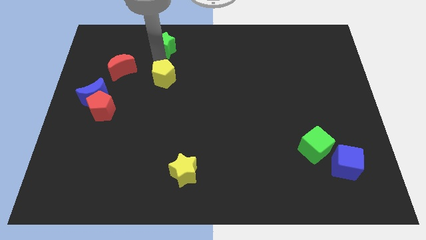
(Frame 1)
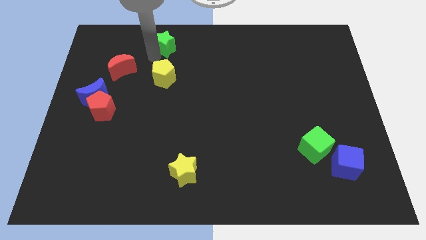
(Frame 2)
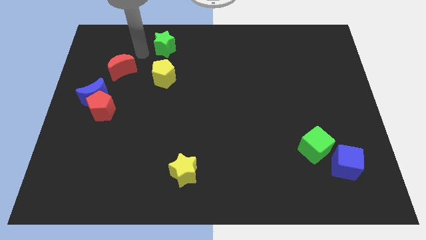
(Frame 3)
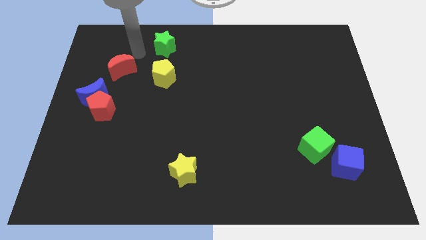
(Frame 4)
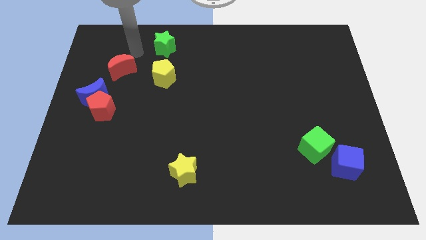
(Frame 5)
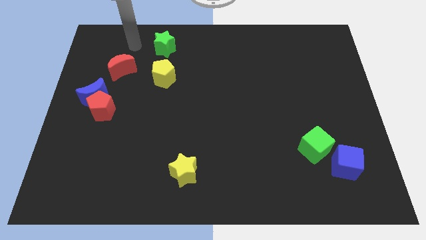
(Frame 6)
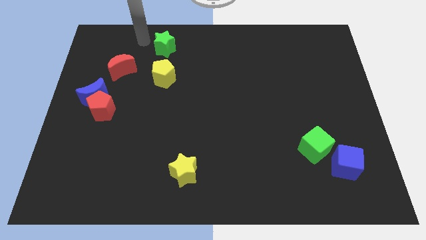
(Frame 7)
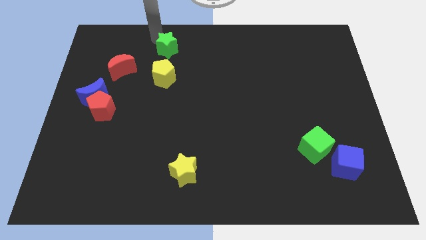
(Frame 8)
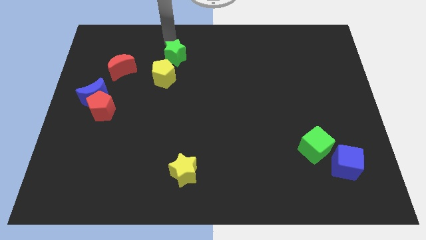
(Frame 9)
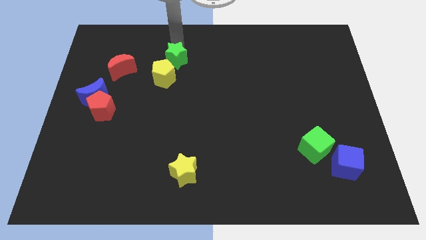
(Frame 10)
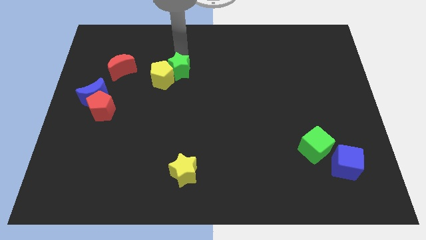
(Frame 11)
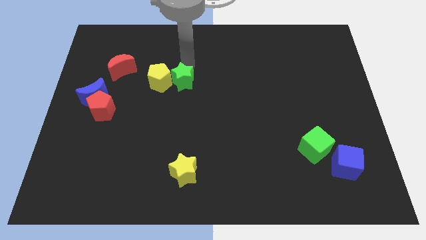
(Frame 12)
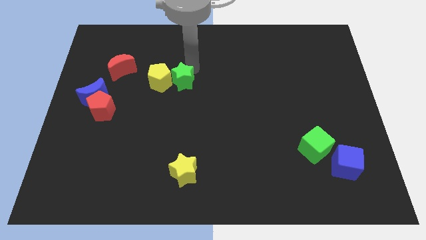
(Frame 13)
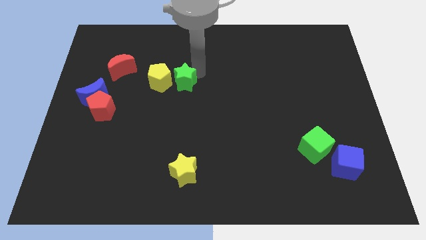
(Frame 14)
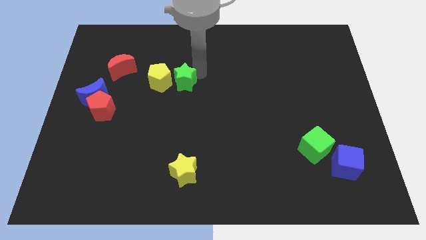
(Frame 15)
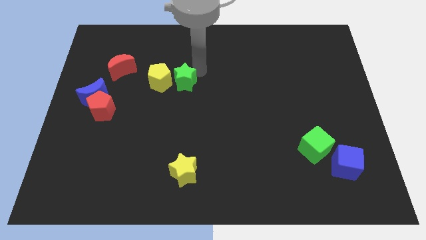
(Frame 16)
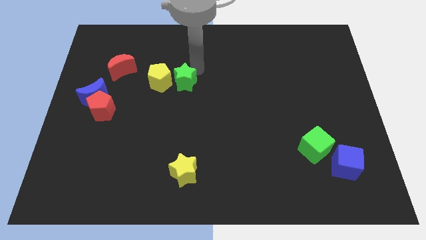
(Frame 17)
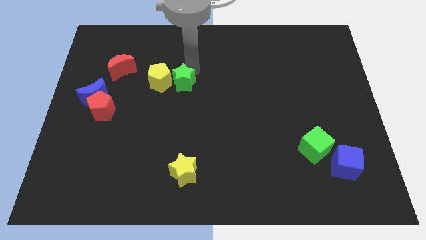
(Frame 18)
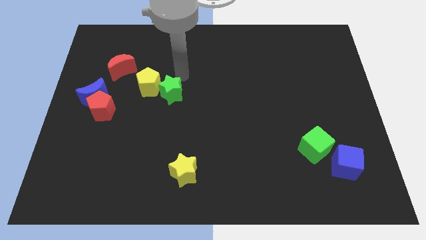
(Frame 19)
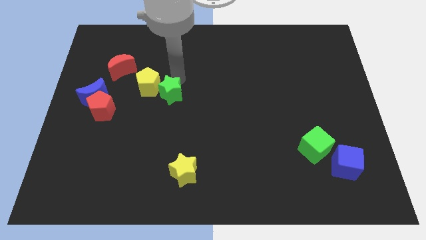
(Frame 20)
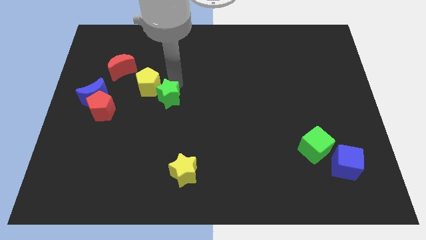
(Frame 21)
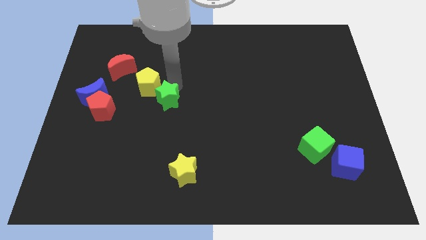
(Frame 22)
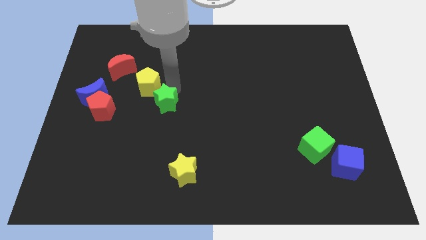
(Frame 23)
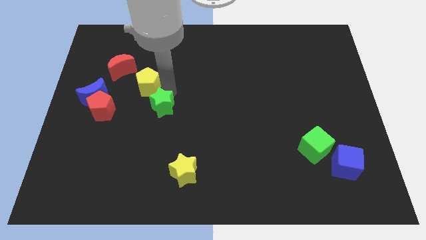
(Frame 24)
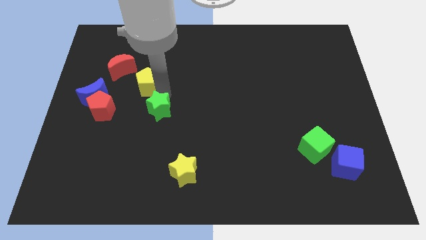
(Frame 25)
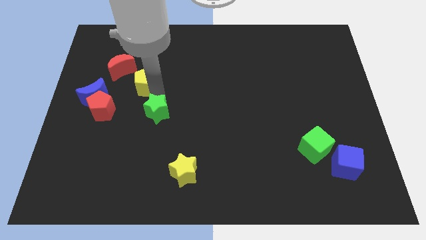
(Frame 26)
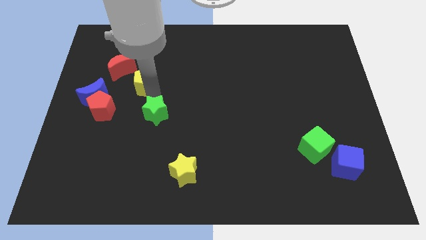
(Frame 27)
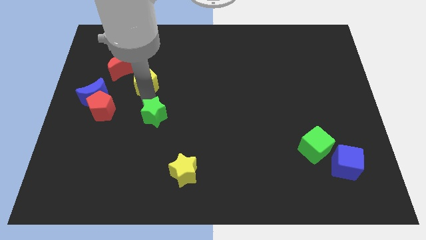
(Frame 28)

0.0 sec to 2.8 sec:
move the green star to the bottom right of the yellow pentagon

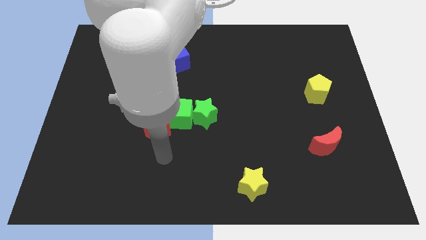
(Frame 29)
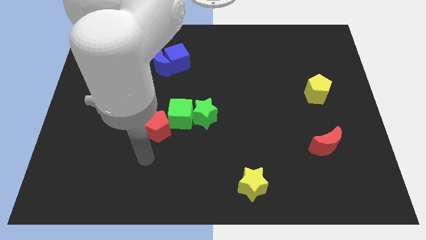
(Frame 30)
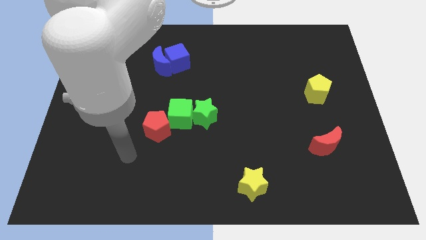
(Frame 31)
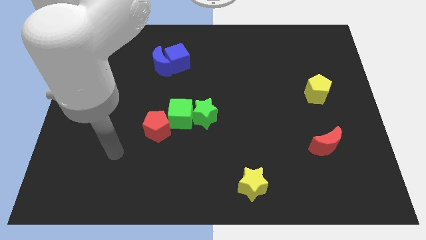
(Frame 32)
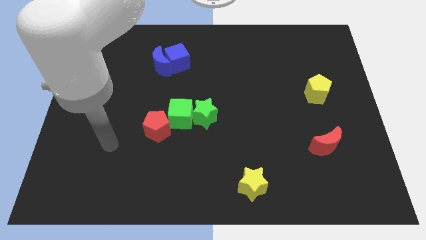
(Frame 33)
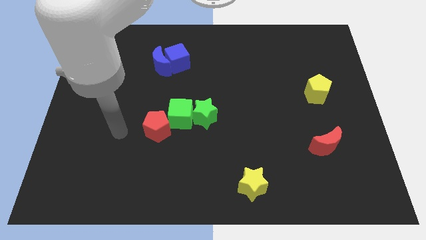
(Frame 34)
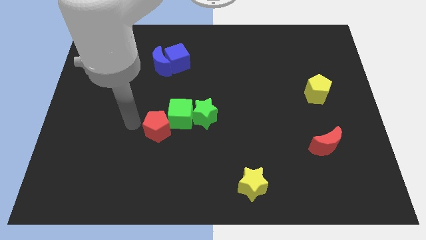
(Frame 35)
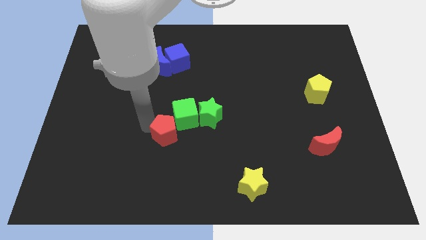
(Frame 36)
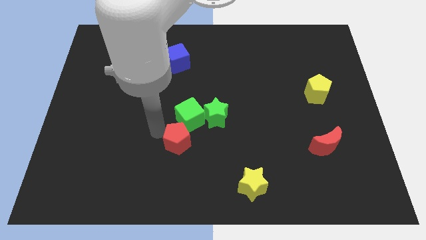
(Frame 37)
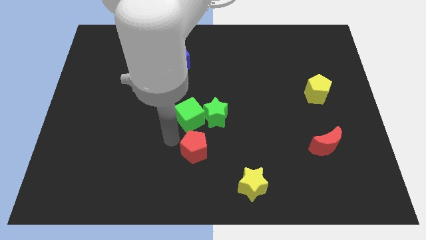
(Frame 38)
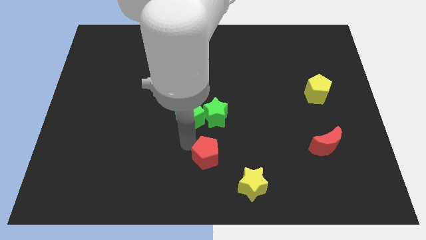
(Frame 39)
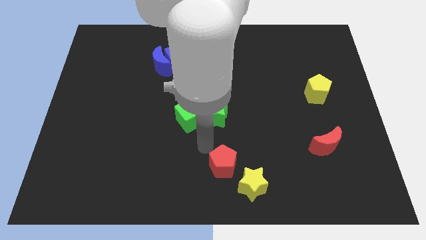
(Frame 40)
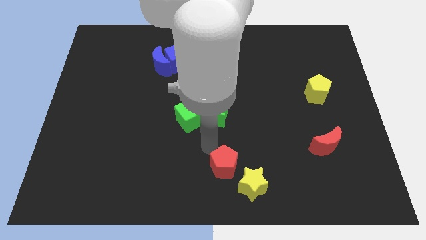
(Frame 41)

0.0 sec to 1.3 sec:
push the red pentagon diagonal to the yellow star at the top left side

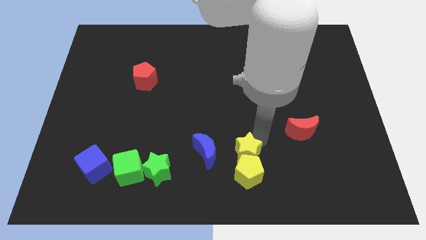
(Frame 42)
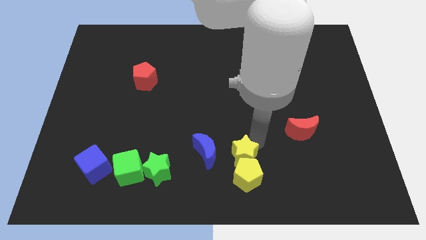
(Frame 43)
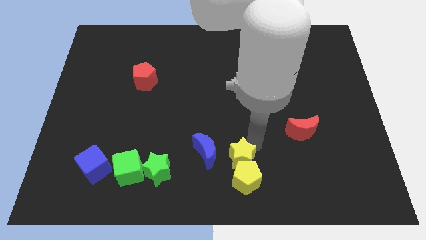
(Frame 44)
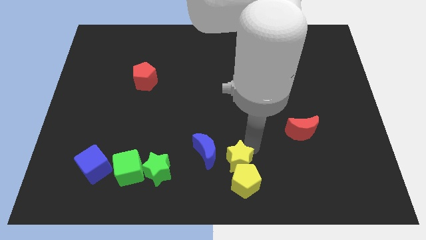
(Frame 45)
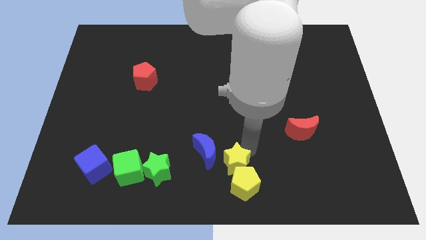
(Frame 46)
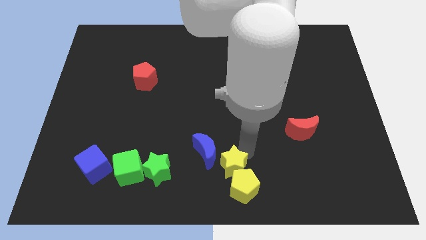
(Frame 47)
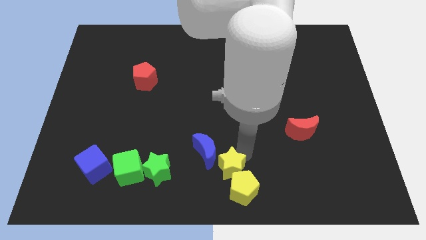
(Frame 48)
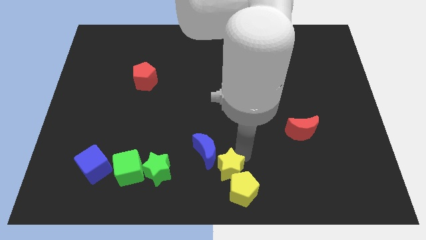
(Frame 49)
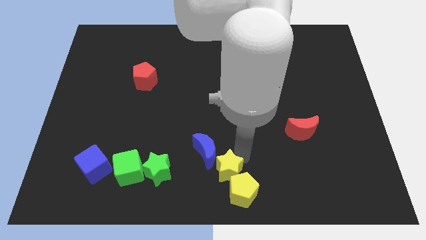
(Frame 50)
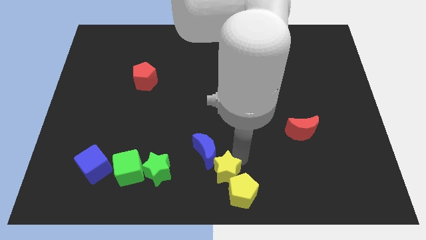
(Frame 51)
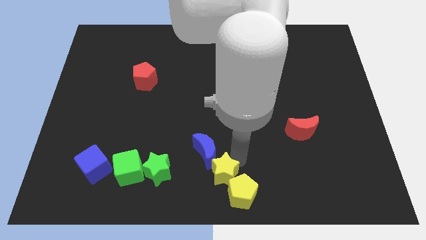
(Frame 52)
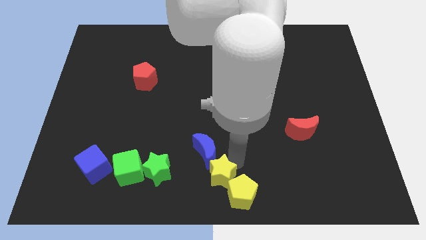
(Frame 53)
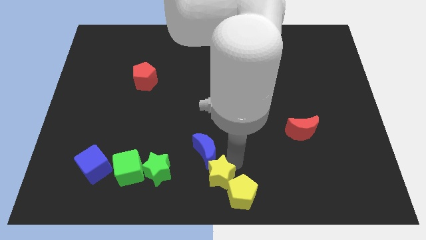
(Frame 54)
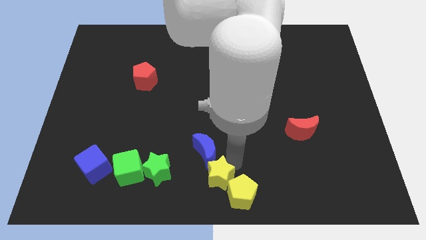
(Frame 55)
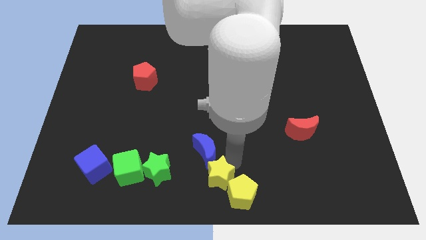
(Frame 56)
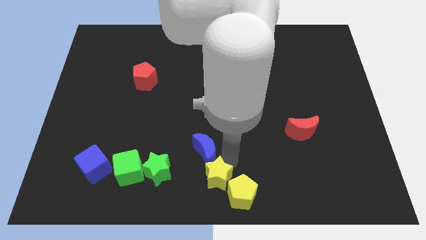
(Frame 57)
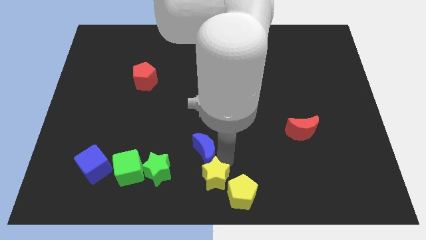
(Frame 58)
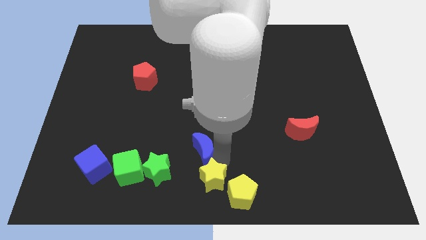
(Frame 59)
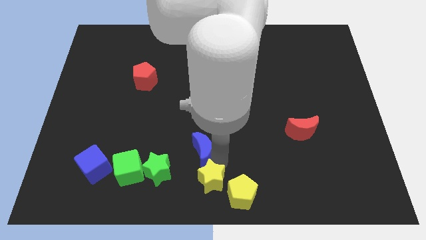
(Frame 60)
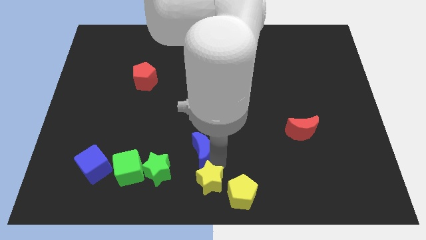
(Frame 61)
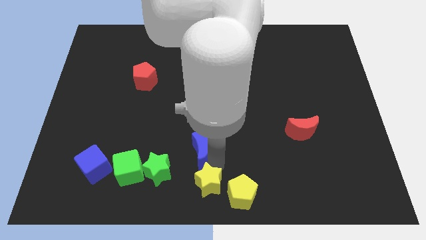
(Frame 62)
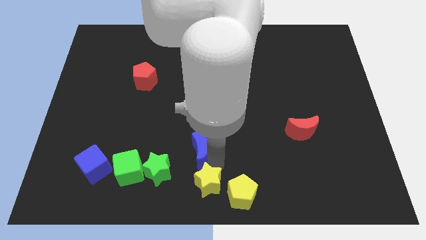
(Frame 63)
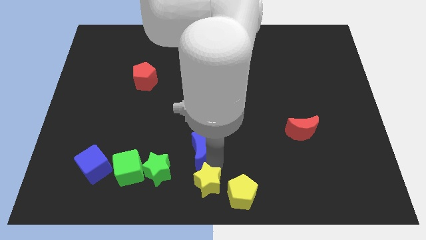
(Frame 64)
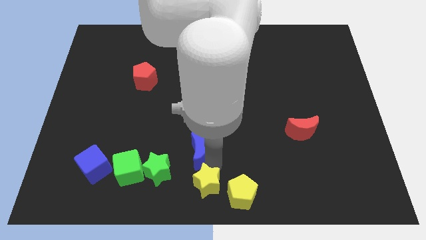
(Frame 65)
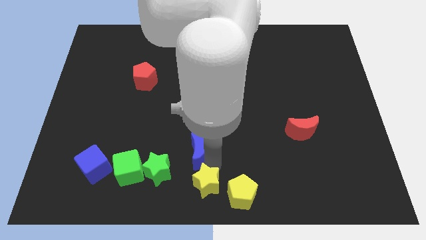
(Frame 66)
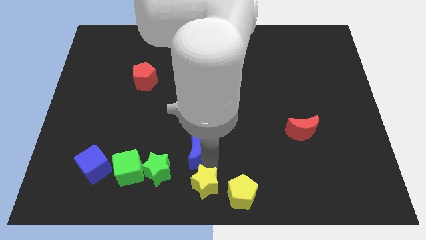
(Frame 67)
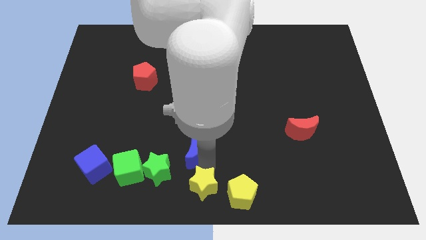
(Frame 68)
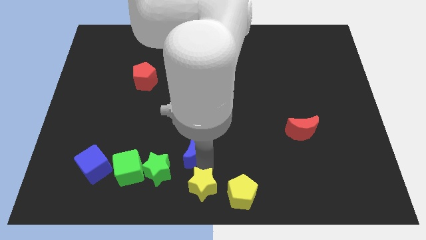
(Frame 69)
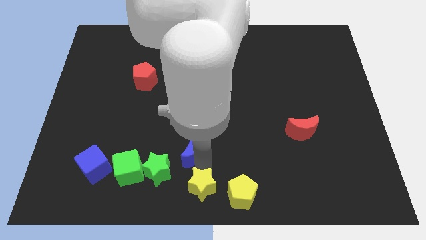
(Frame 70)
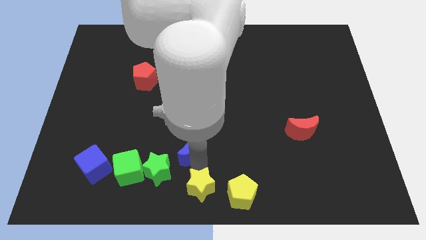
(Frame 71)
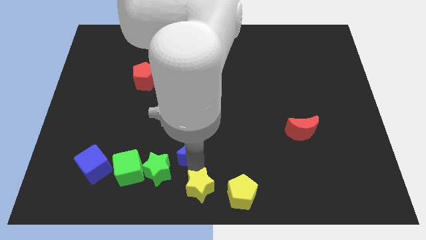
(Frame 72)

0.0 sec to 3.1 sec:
separate the yellow star and yellow pentagon

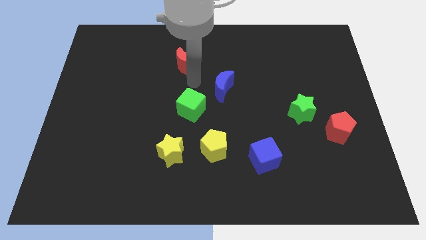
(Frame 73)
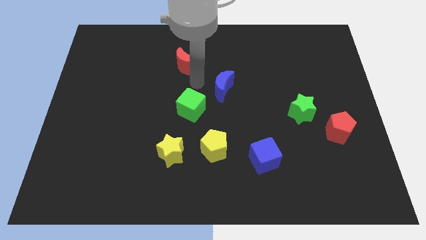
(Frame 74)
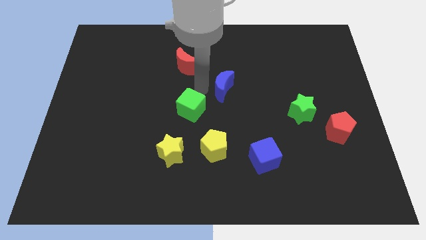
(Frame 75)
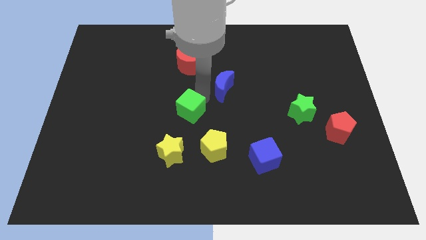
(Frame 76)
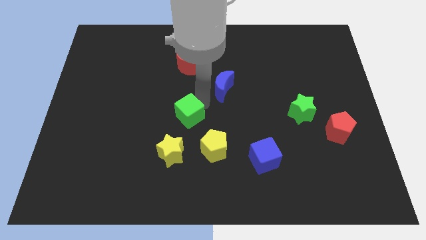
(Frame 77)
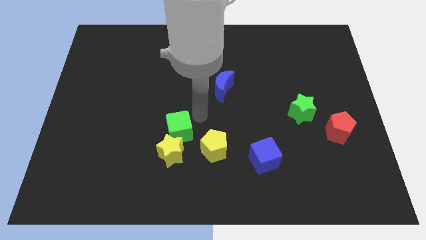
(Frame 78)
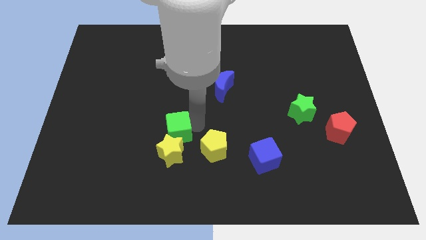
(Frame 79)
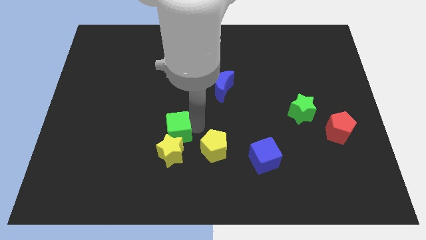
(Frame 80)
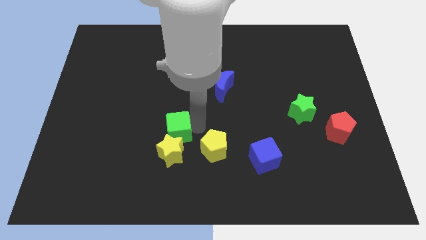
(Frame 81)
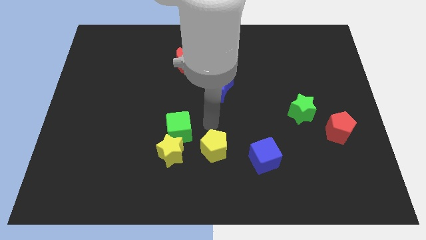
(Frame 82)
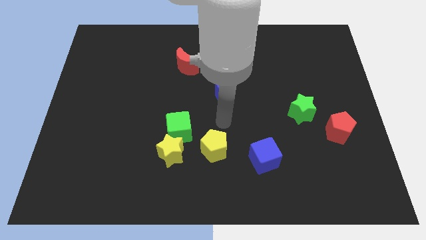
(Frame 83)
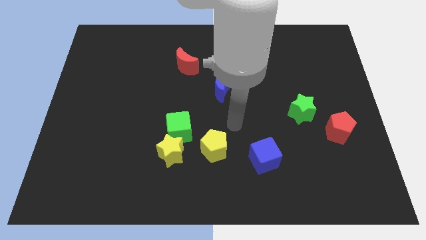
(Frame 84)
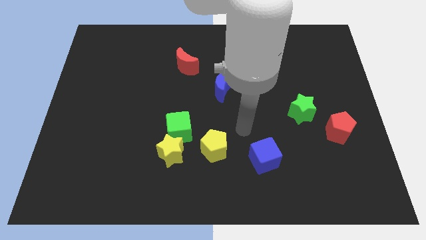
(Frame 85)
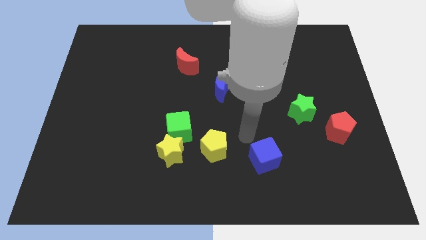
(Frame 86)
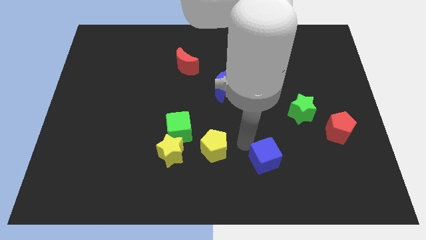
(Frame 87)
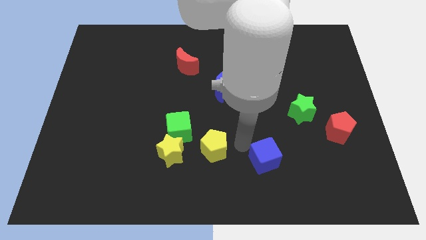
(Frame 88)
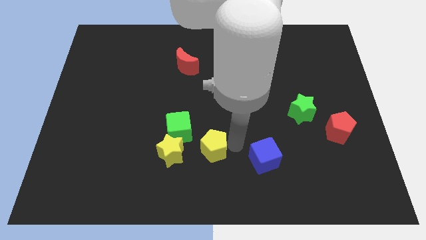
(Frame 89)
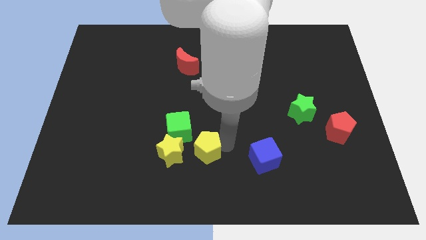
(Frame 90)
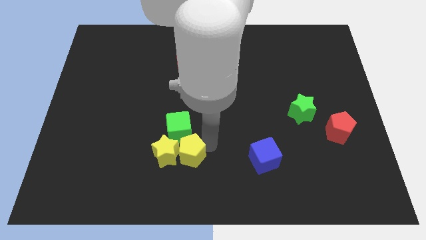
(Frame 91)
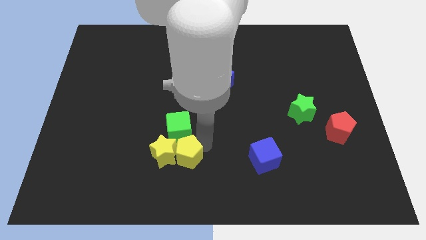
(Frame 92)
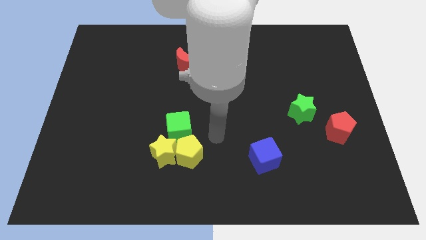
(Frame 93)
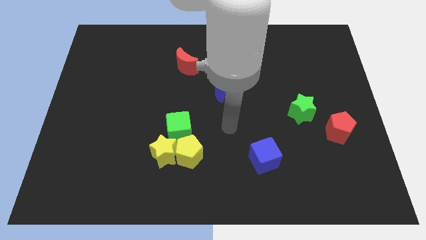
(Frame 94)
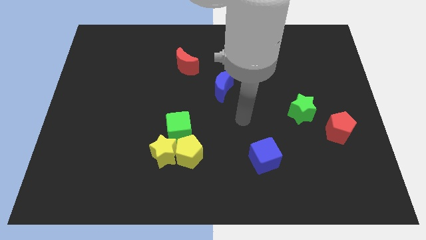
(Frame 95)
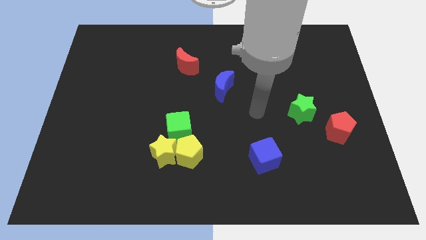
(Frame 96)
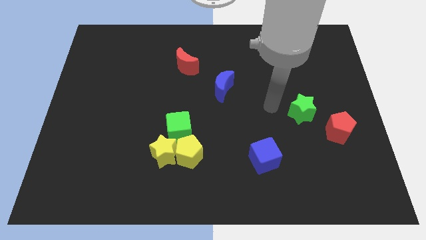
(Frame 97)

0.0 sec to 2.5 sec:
push green cube along with yellow pentagon in to yellow star
